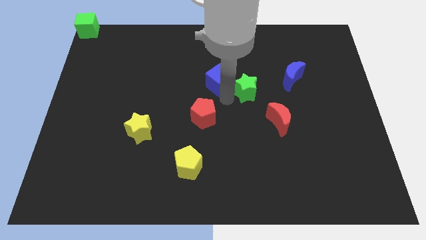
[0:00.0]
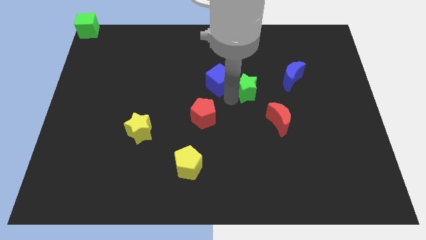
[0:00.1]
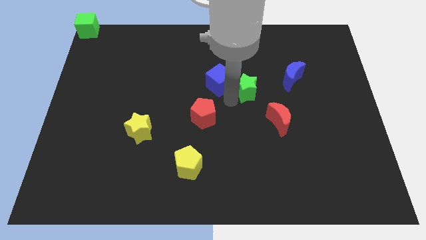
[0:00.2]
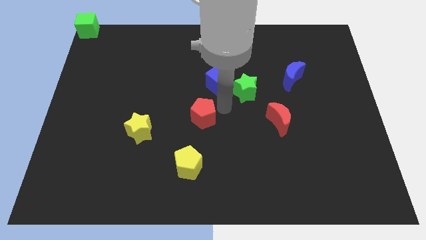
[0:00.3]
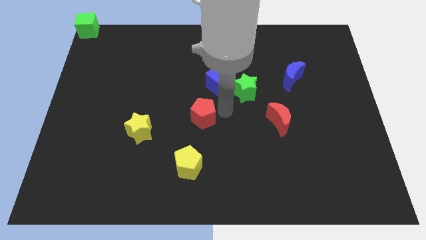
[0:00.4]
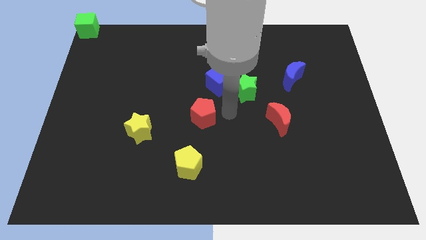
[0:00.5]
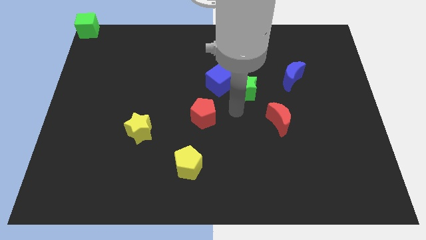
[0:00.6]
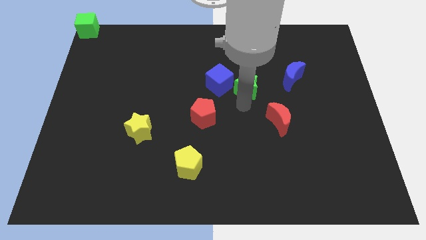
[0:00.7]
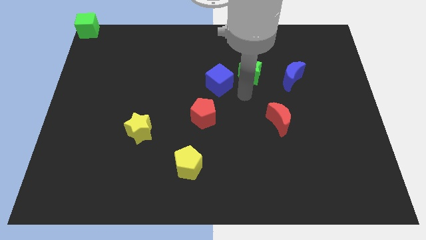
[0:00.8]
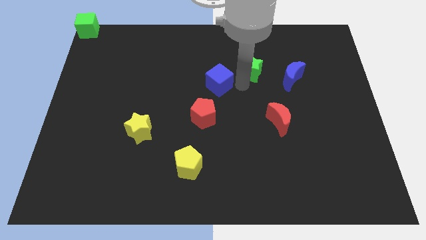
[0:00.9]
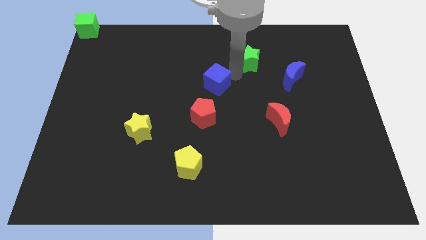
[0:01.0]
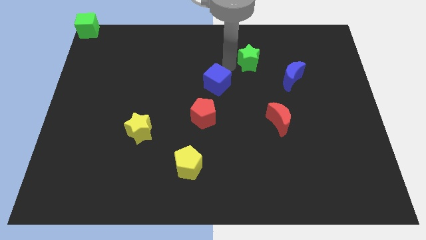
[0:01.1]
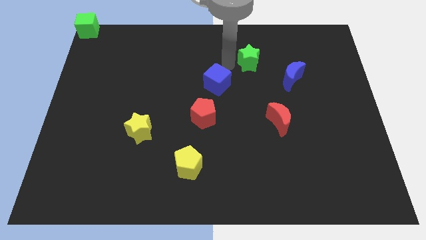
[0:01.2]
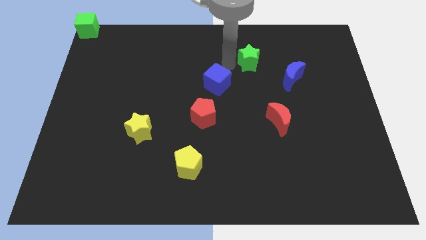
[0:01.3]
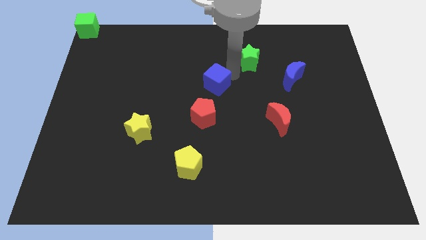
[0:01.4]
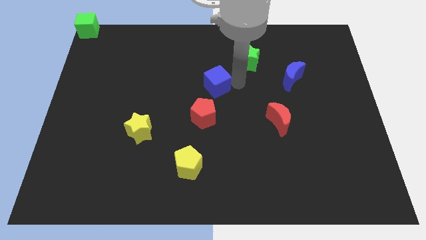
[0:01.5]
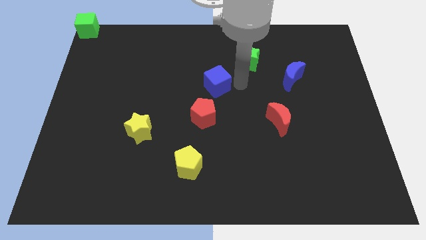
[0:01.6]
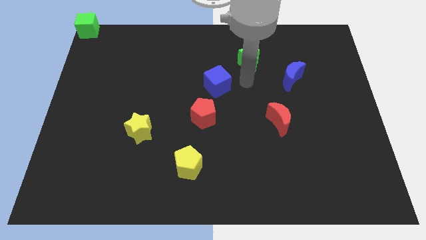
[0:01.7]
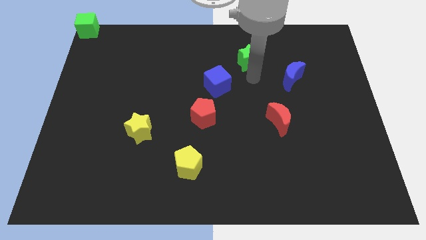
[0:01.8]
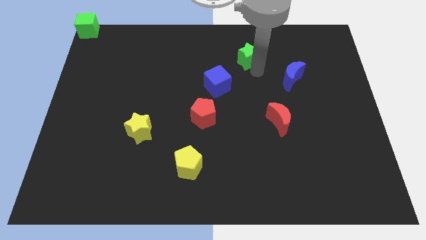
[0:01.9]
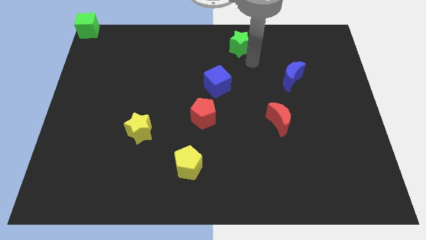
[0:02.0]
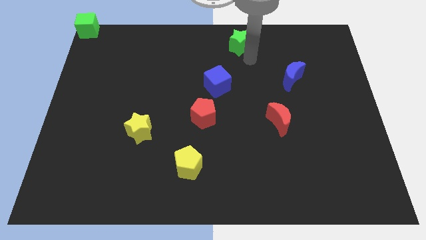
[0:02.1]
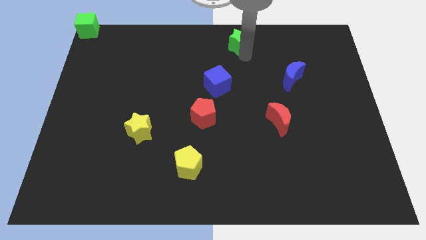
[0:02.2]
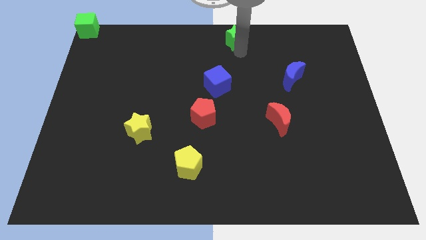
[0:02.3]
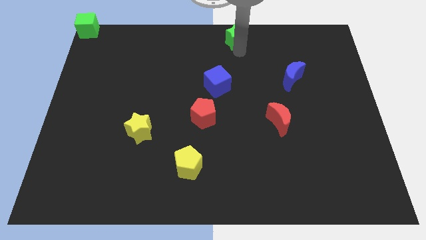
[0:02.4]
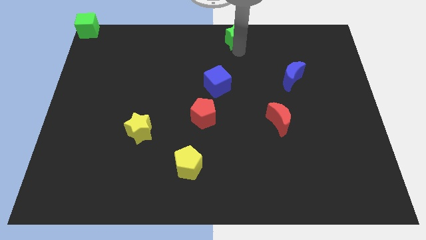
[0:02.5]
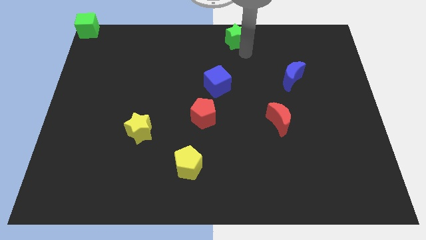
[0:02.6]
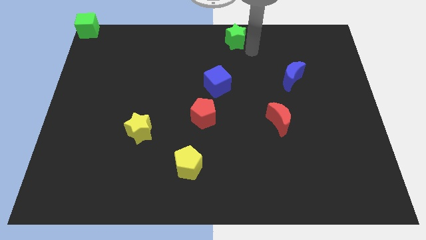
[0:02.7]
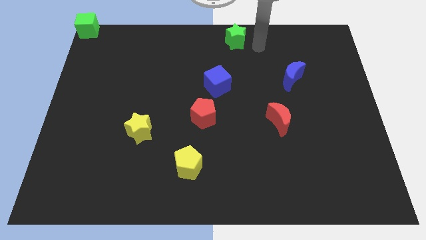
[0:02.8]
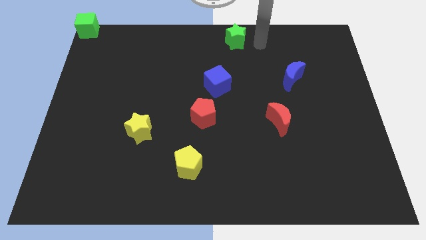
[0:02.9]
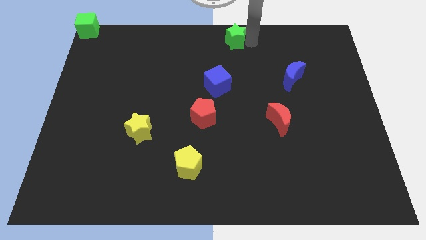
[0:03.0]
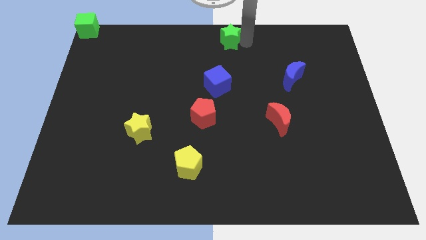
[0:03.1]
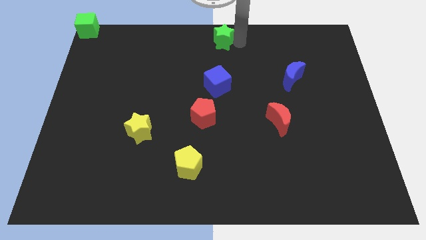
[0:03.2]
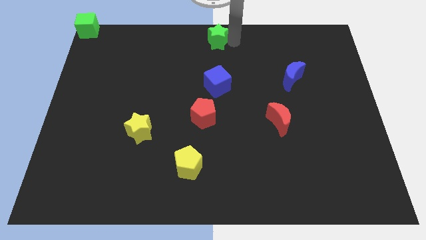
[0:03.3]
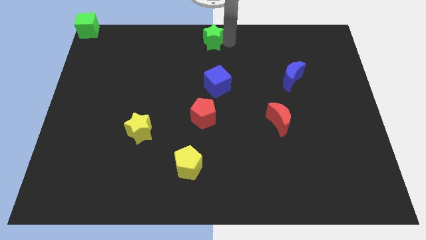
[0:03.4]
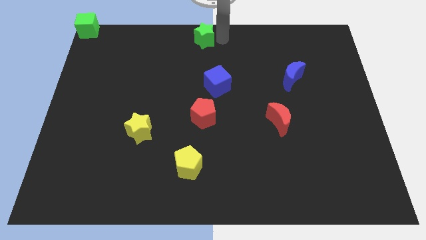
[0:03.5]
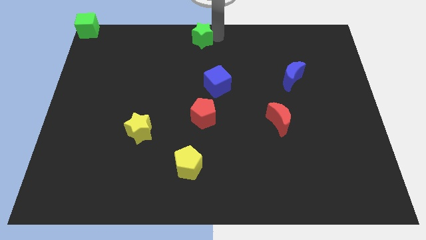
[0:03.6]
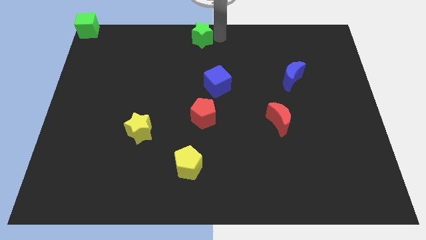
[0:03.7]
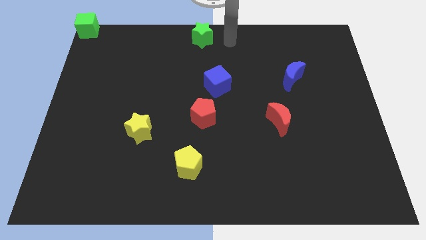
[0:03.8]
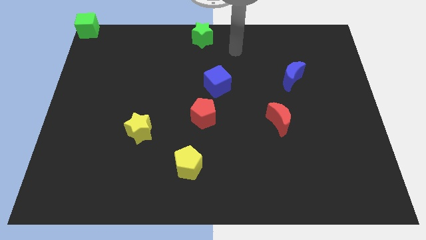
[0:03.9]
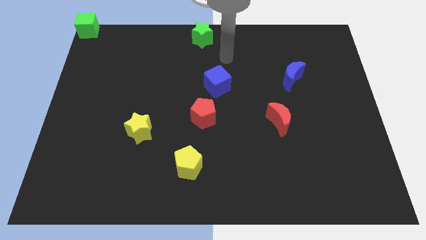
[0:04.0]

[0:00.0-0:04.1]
separate green star from blue cube

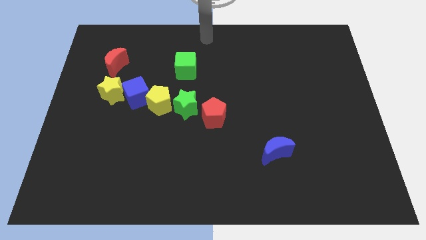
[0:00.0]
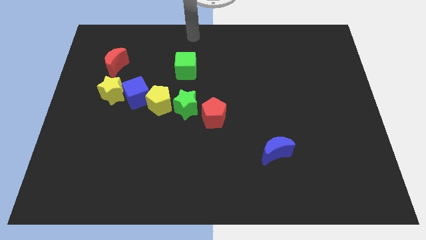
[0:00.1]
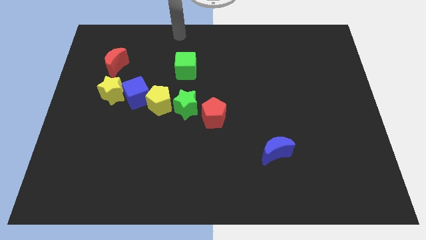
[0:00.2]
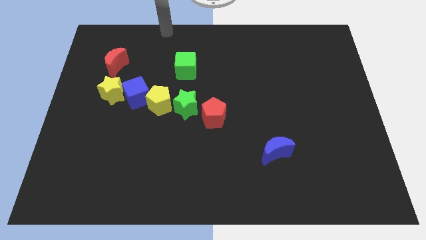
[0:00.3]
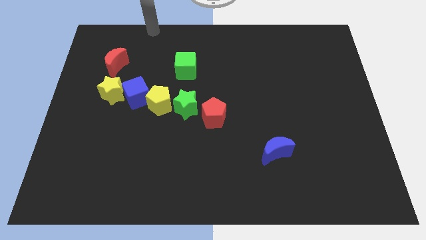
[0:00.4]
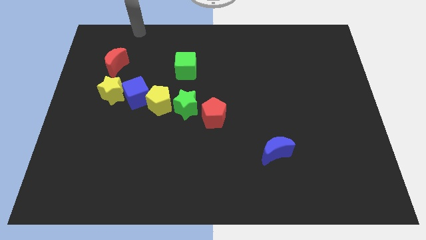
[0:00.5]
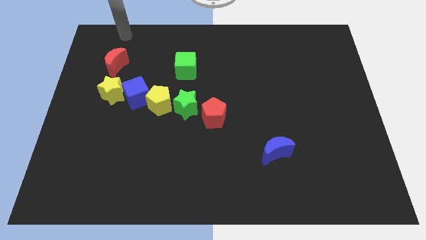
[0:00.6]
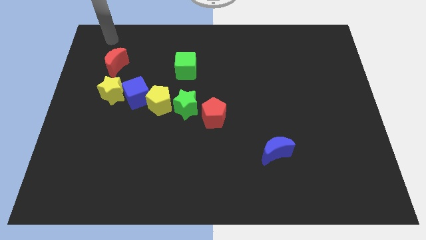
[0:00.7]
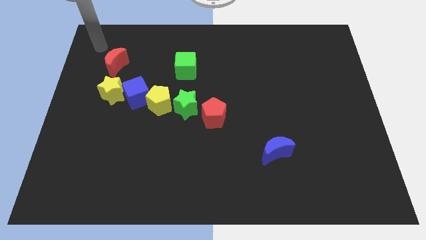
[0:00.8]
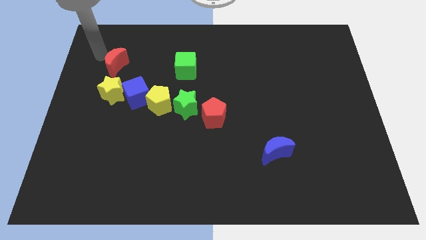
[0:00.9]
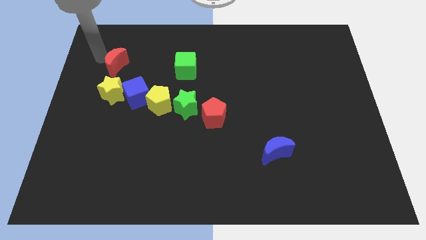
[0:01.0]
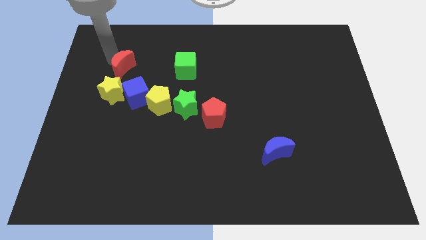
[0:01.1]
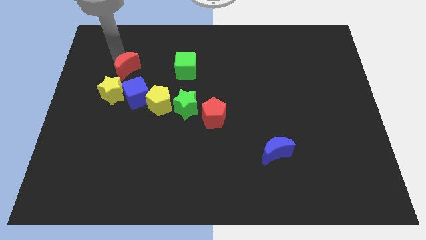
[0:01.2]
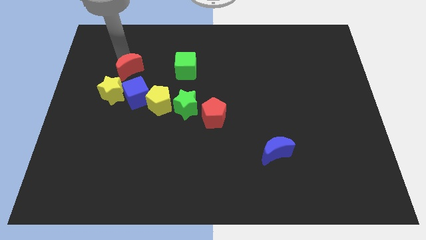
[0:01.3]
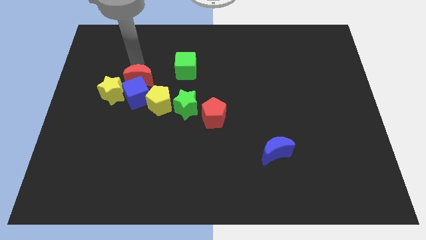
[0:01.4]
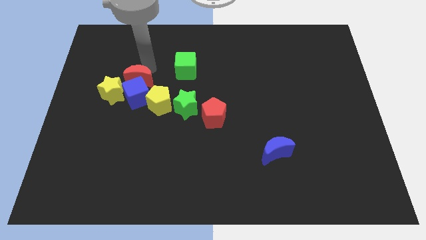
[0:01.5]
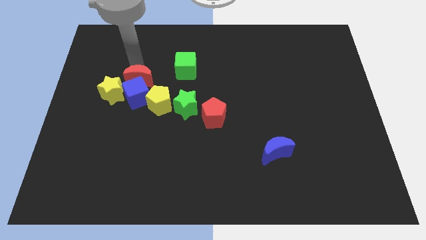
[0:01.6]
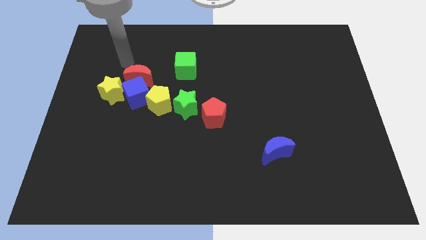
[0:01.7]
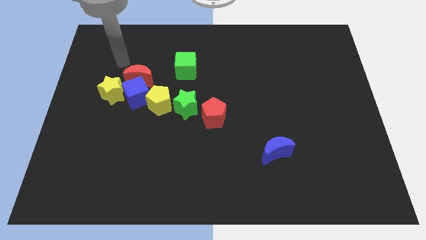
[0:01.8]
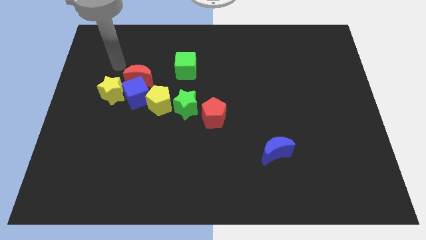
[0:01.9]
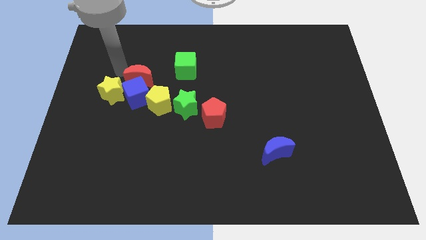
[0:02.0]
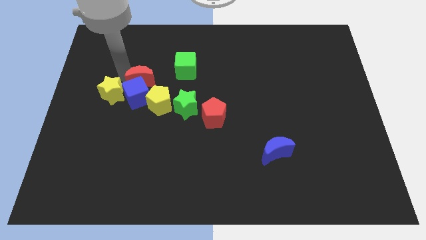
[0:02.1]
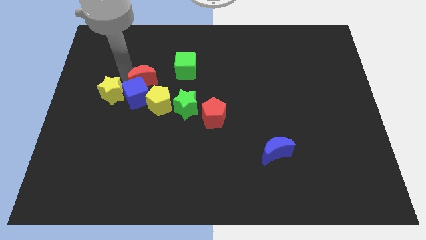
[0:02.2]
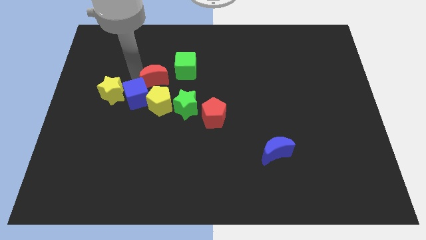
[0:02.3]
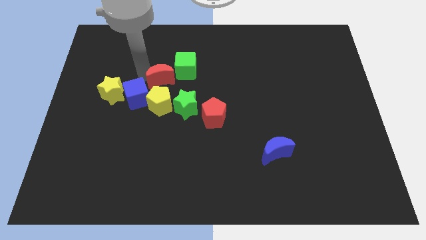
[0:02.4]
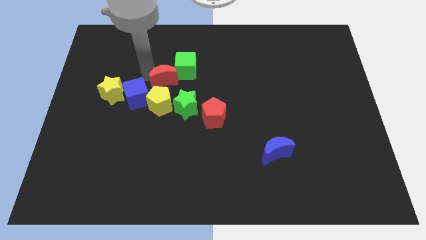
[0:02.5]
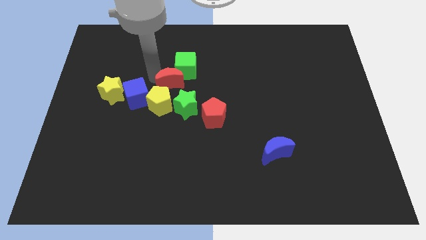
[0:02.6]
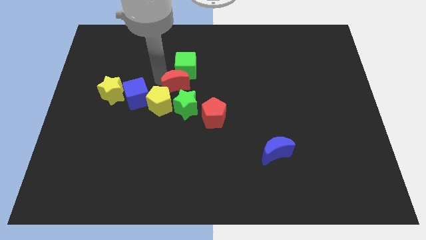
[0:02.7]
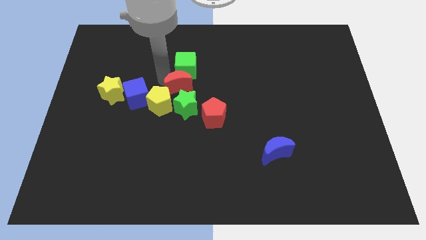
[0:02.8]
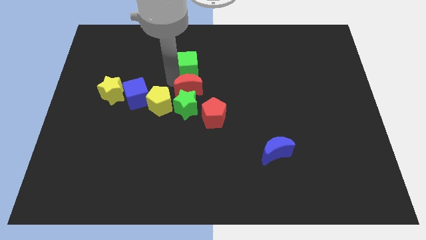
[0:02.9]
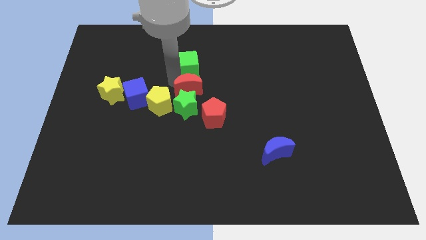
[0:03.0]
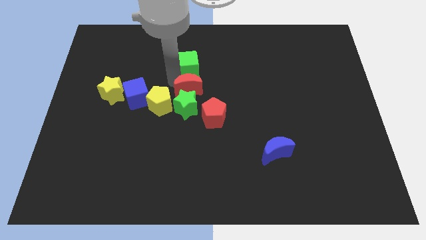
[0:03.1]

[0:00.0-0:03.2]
place the red moon in between the green cube and green star

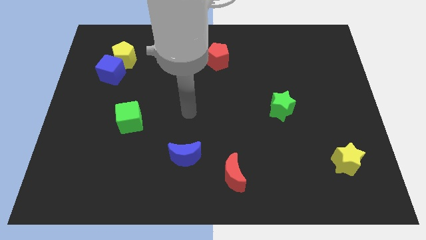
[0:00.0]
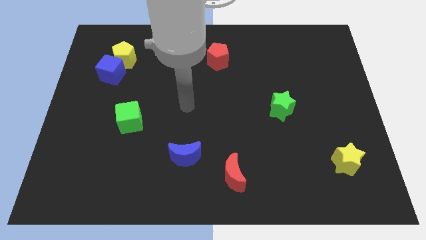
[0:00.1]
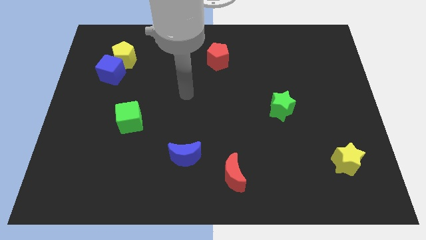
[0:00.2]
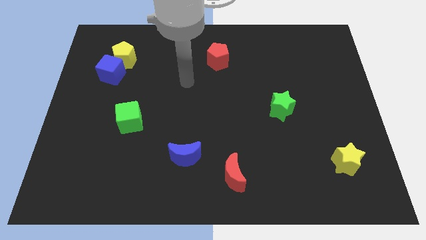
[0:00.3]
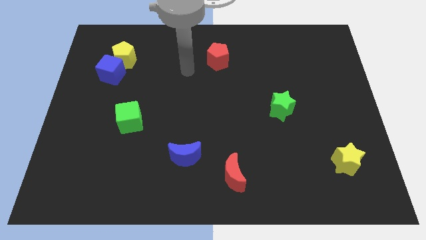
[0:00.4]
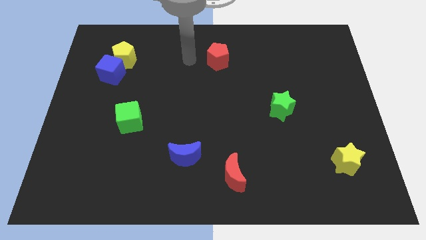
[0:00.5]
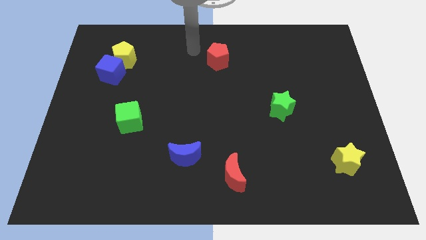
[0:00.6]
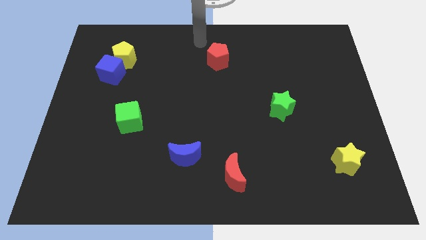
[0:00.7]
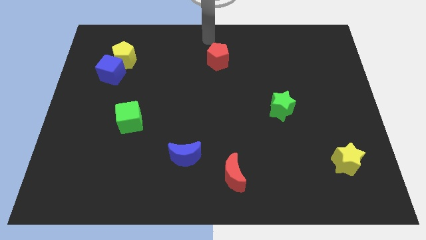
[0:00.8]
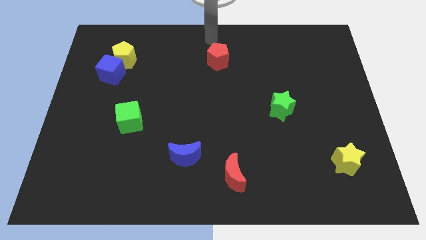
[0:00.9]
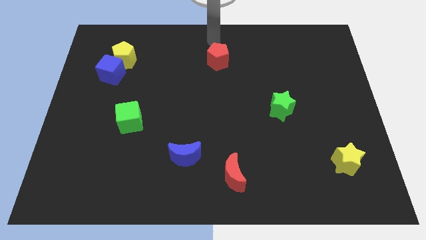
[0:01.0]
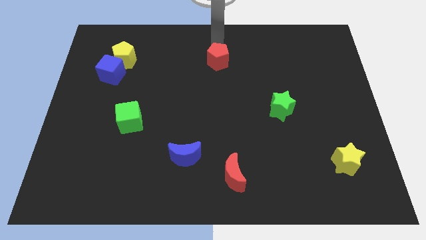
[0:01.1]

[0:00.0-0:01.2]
move your arm to the top of red pentagon

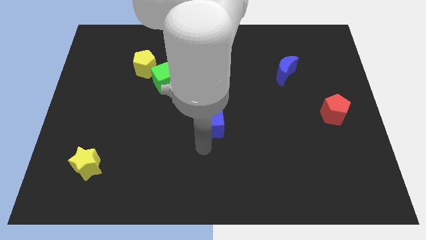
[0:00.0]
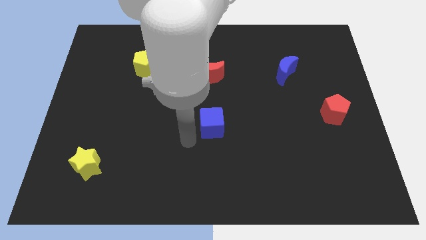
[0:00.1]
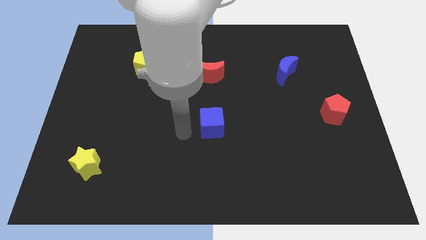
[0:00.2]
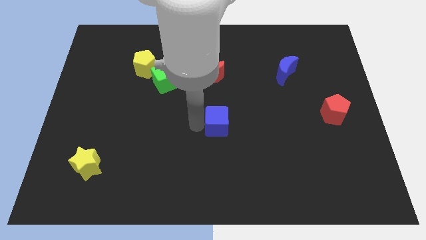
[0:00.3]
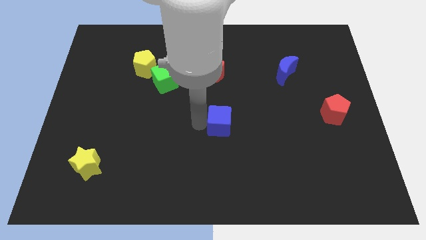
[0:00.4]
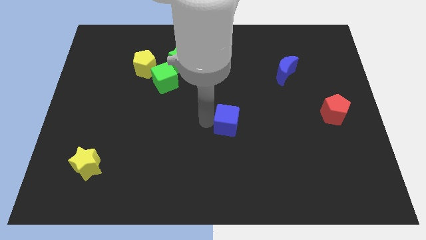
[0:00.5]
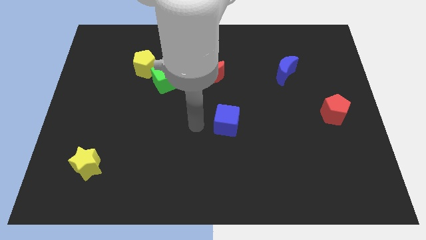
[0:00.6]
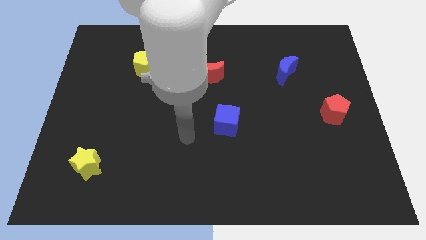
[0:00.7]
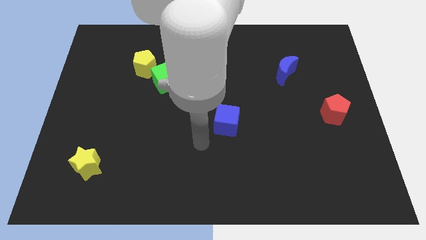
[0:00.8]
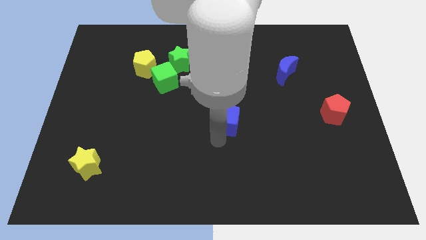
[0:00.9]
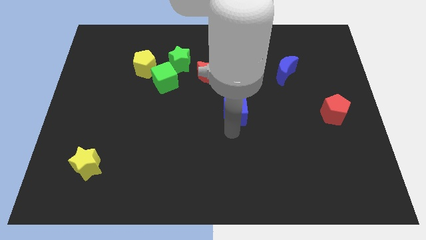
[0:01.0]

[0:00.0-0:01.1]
push the blue cube slightly to the top right
